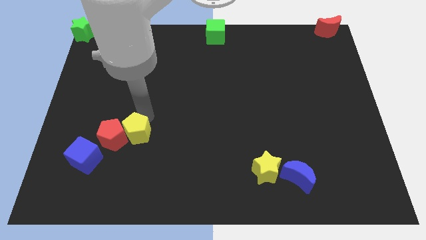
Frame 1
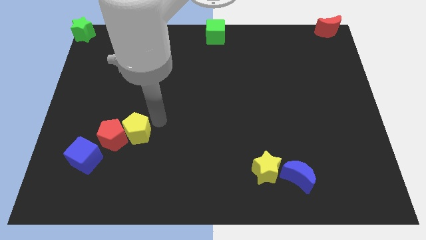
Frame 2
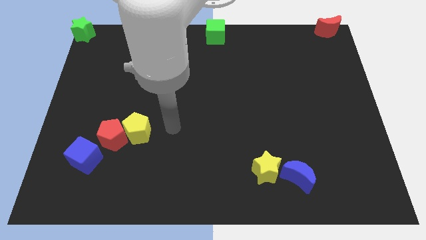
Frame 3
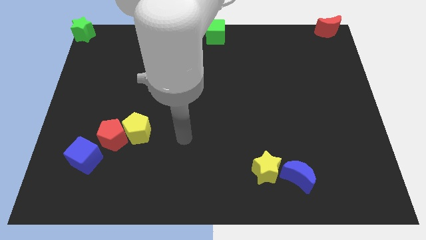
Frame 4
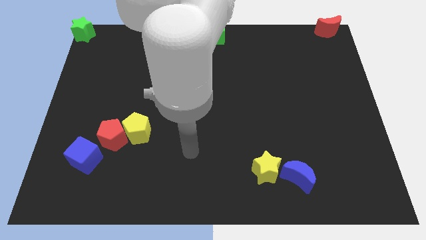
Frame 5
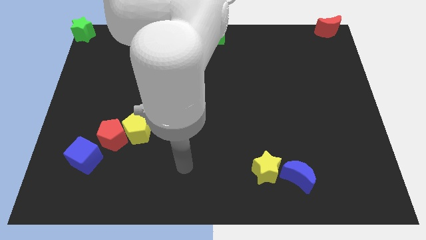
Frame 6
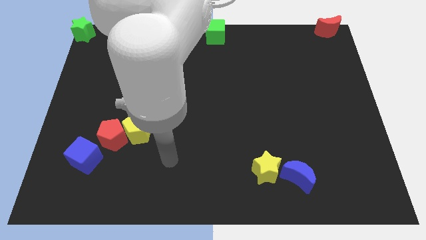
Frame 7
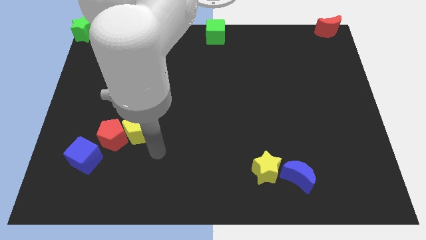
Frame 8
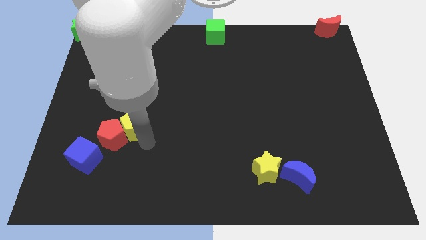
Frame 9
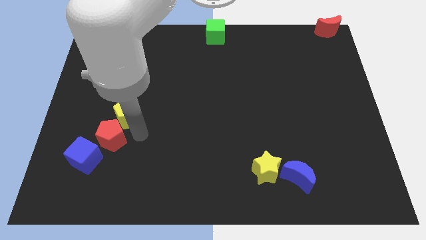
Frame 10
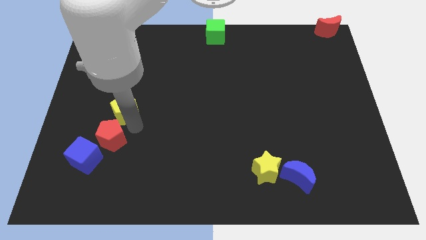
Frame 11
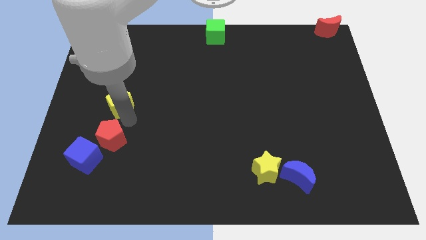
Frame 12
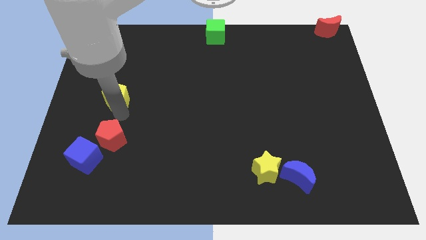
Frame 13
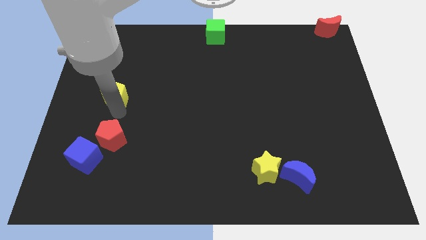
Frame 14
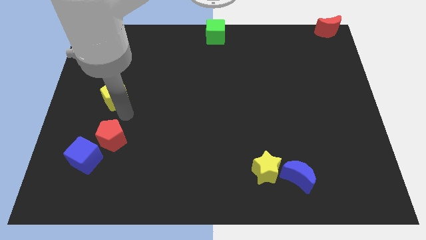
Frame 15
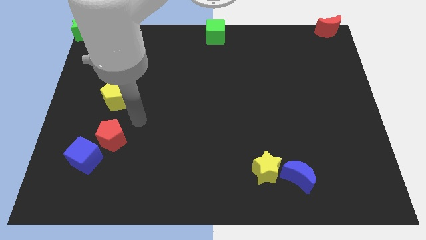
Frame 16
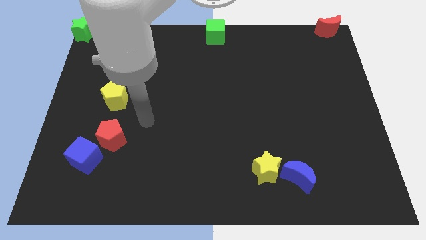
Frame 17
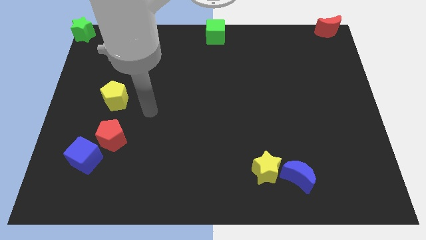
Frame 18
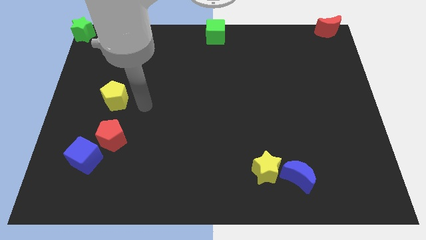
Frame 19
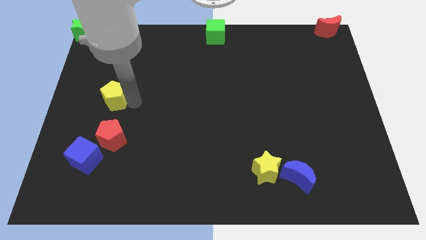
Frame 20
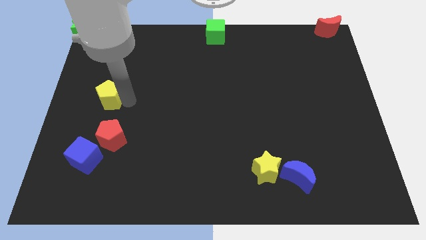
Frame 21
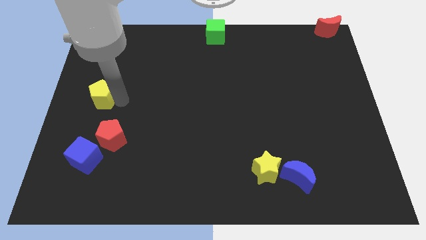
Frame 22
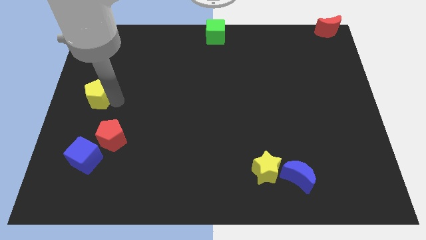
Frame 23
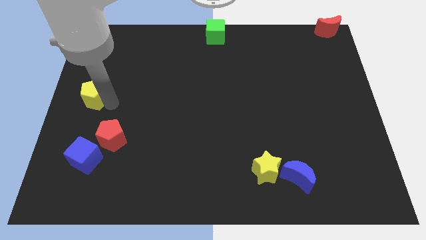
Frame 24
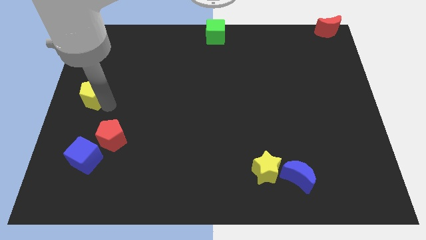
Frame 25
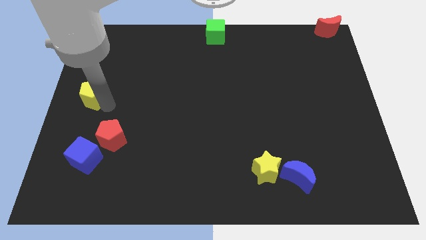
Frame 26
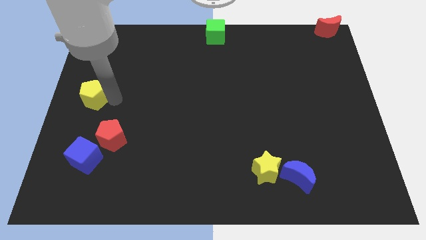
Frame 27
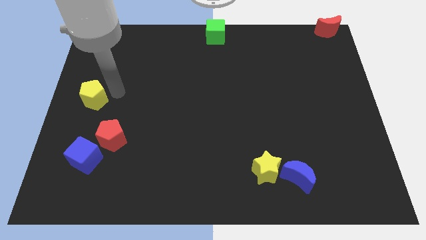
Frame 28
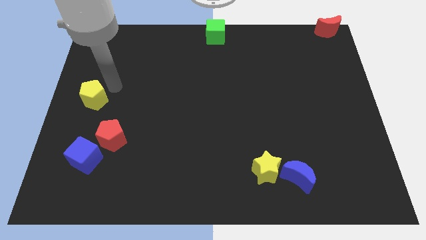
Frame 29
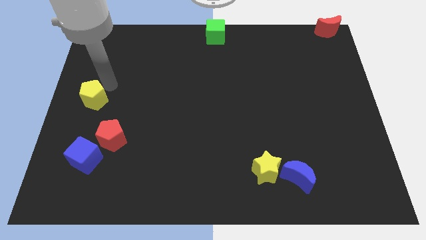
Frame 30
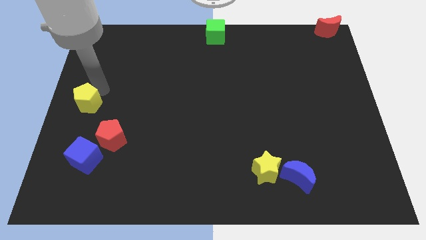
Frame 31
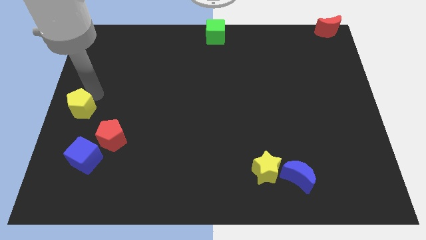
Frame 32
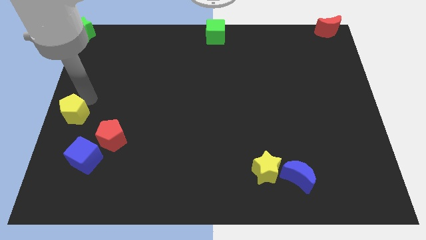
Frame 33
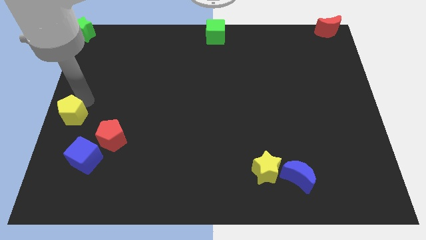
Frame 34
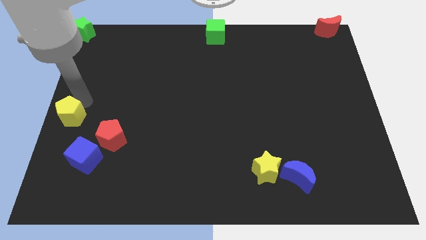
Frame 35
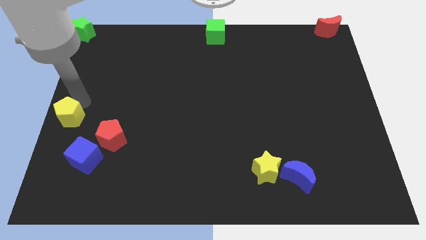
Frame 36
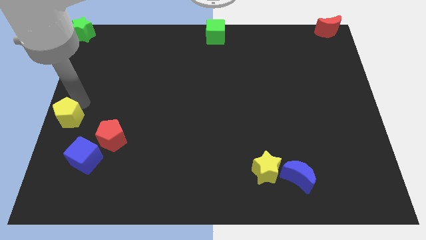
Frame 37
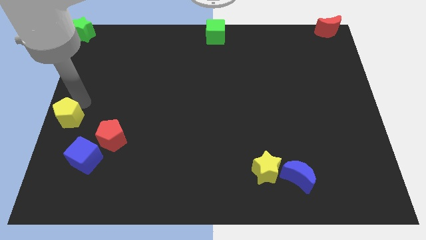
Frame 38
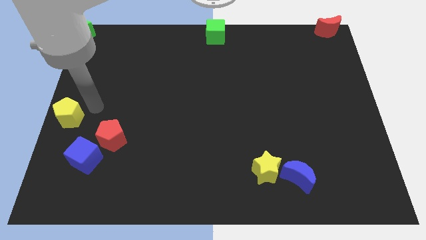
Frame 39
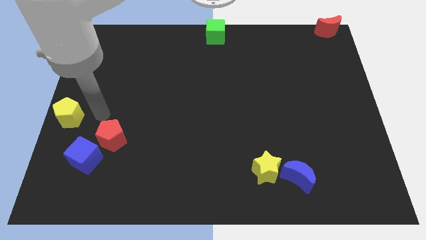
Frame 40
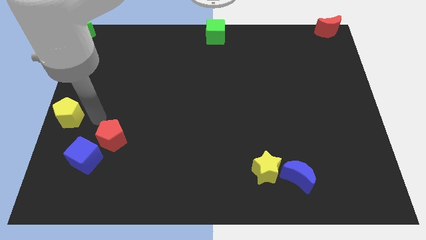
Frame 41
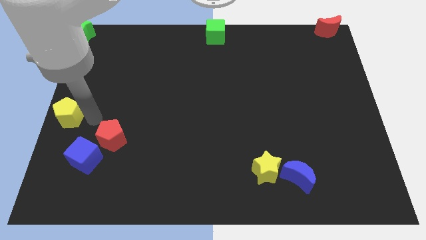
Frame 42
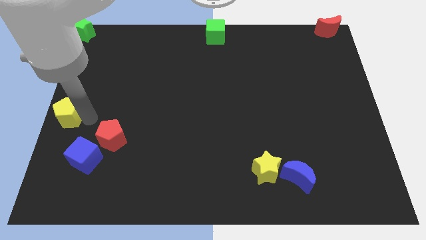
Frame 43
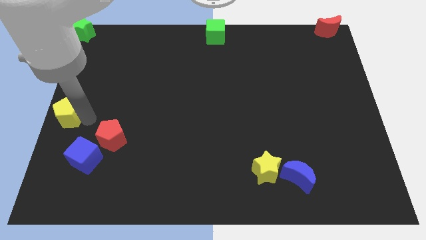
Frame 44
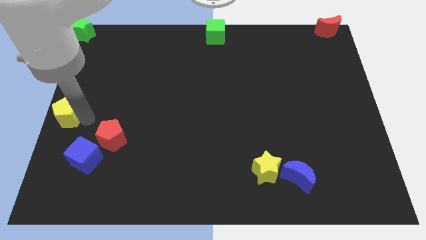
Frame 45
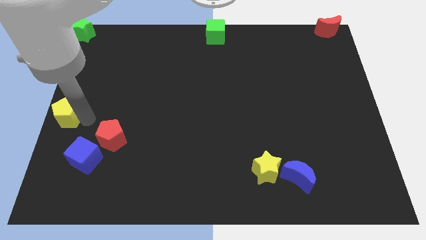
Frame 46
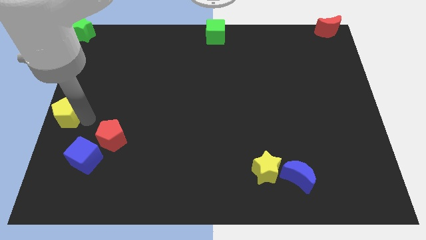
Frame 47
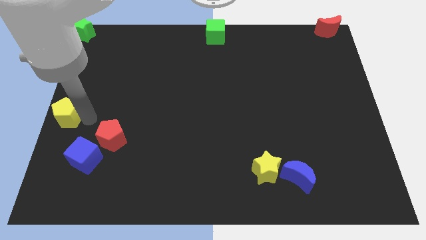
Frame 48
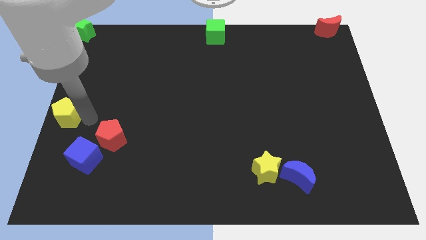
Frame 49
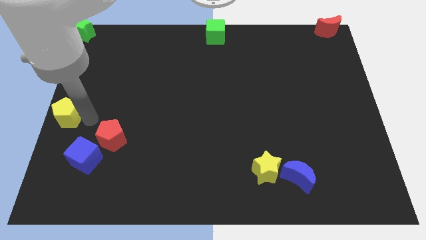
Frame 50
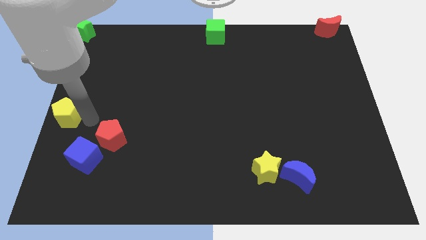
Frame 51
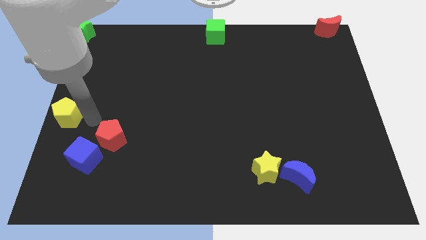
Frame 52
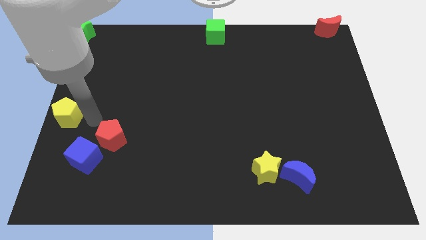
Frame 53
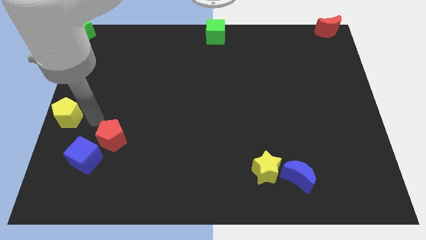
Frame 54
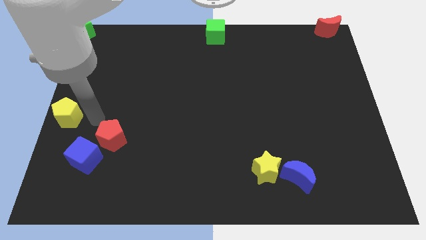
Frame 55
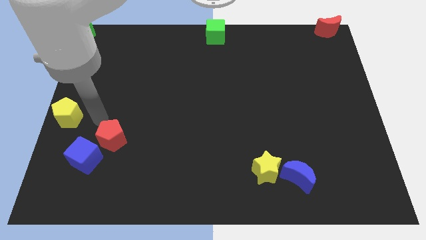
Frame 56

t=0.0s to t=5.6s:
move yellow pentagon to the left center of the board

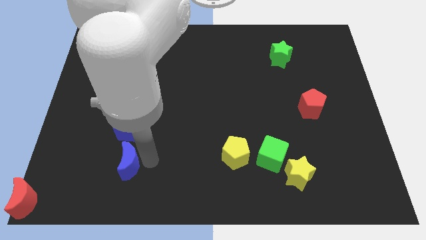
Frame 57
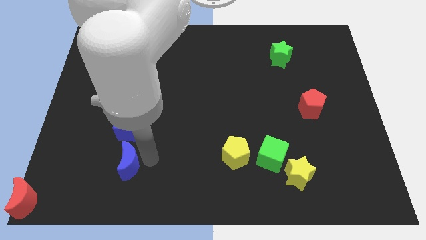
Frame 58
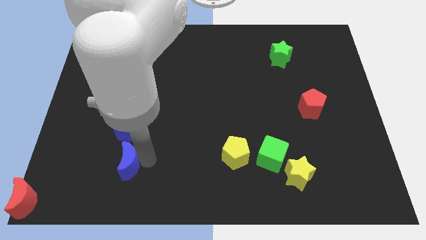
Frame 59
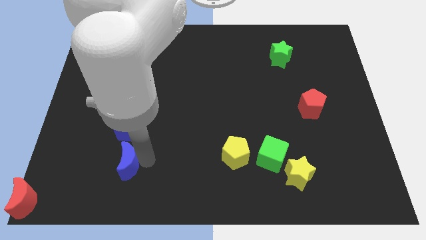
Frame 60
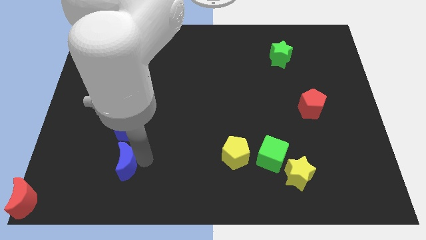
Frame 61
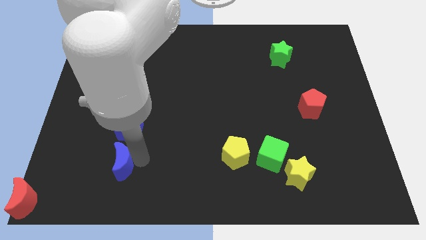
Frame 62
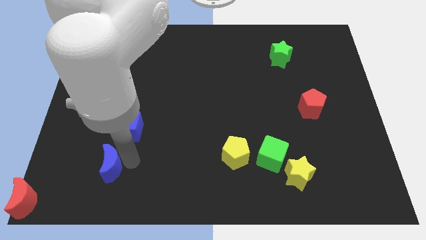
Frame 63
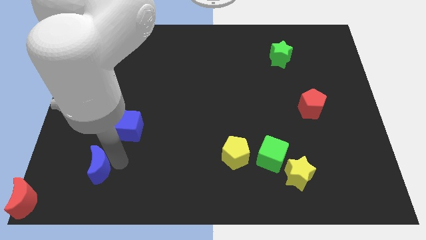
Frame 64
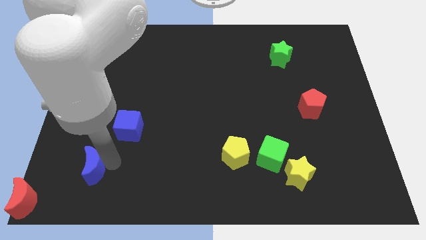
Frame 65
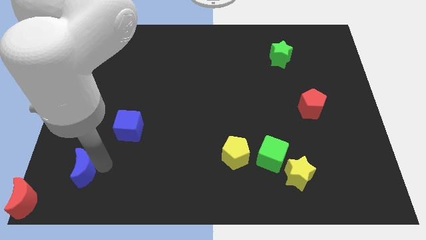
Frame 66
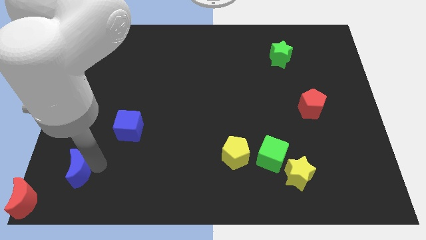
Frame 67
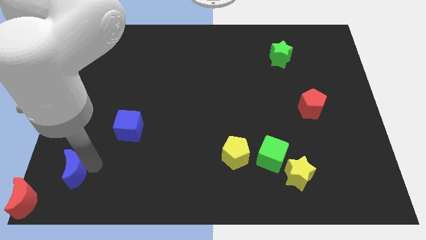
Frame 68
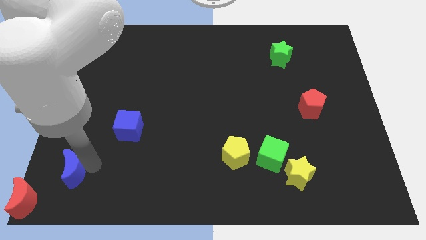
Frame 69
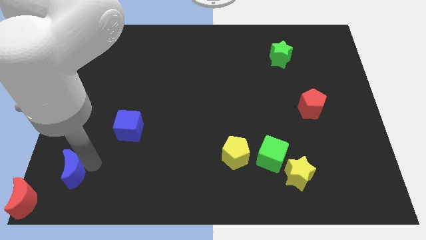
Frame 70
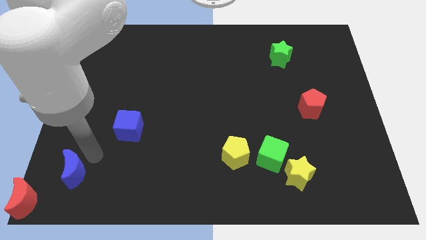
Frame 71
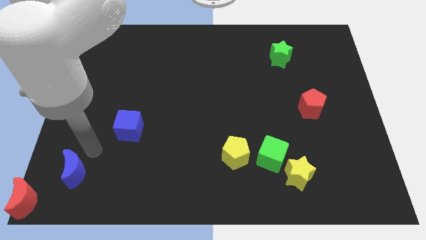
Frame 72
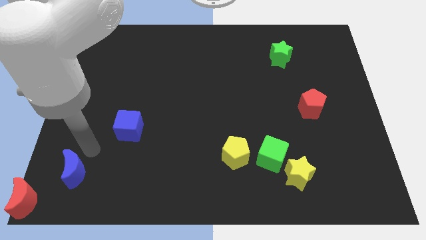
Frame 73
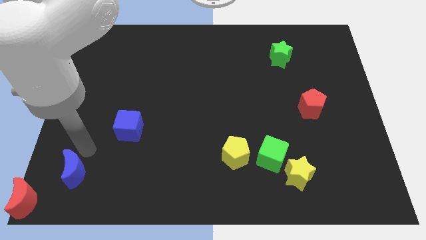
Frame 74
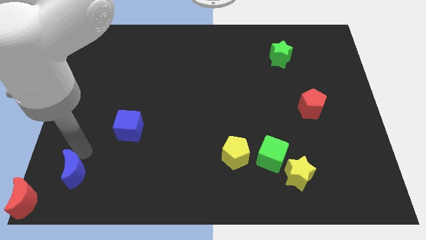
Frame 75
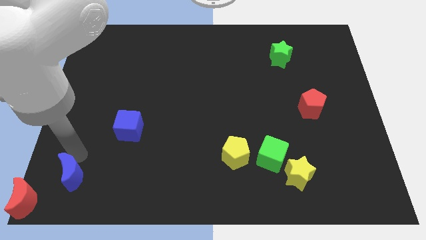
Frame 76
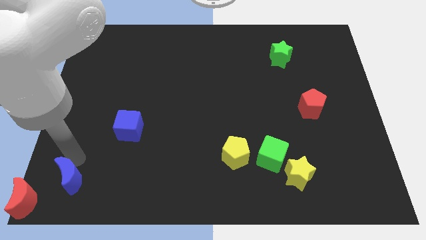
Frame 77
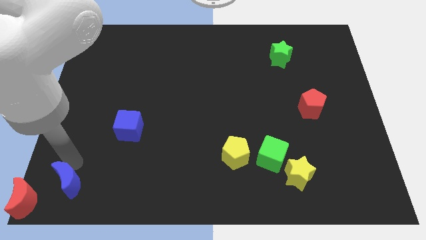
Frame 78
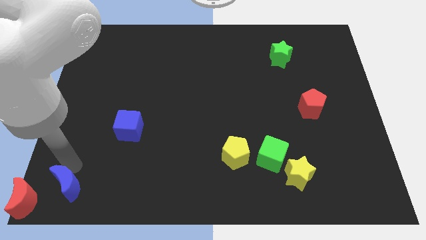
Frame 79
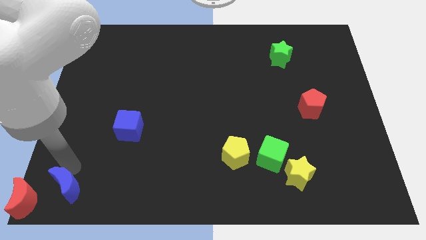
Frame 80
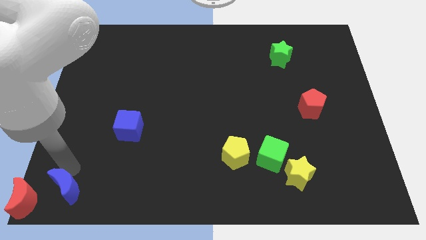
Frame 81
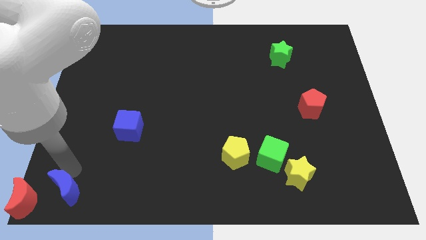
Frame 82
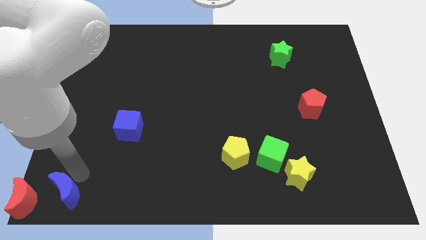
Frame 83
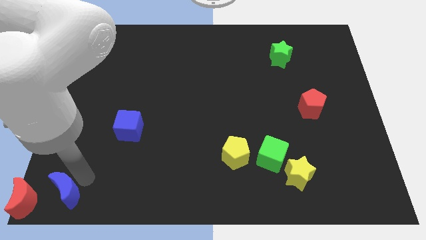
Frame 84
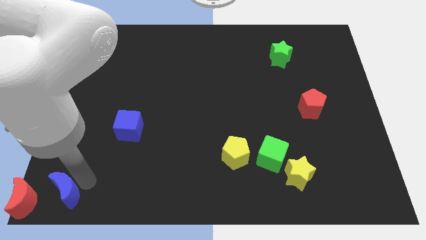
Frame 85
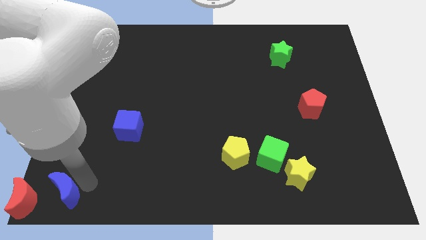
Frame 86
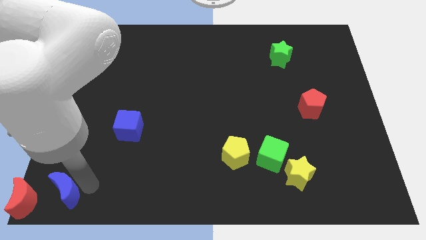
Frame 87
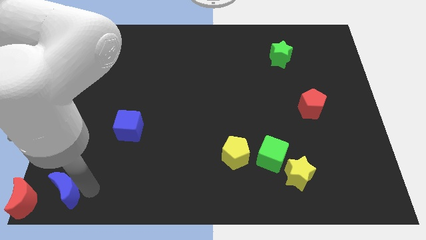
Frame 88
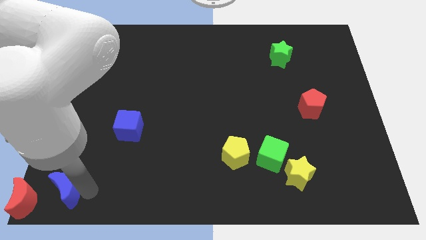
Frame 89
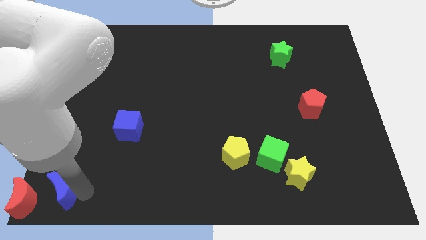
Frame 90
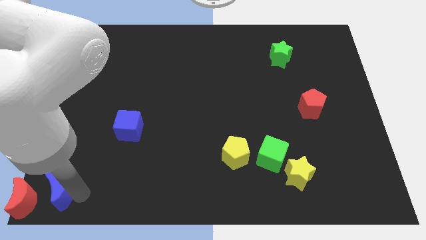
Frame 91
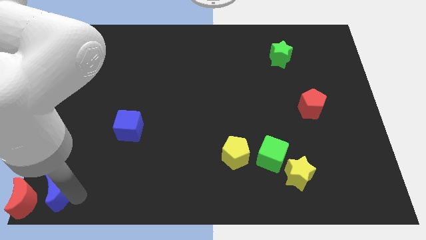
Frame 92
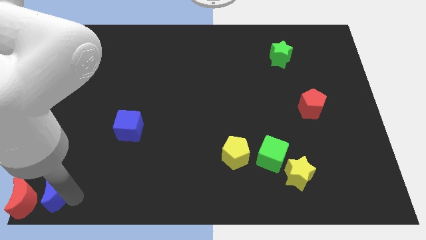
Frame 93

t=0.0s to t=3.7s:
slide the blue crescent diagonally bottom left to the blue cube
